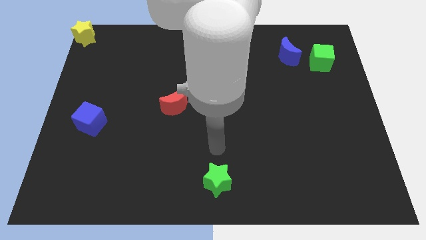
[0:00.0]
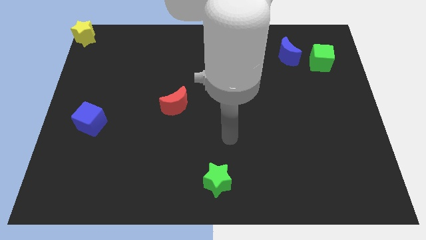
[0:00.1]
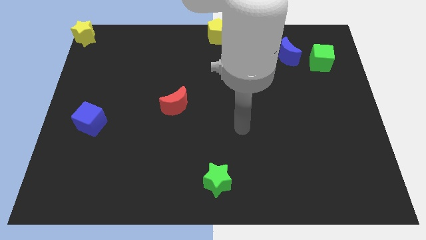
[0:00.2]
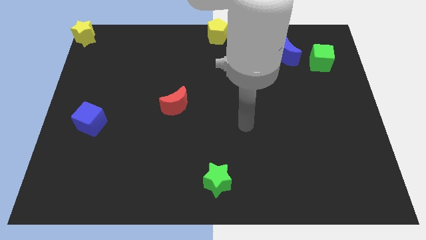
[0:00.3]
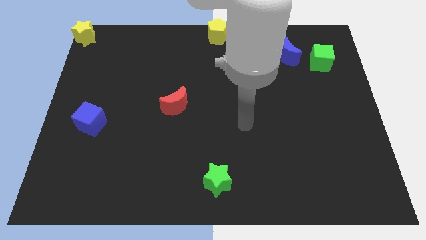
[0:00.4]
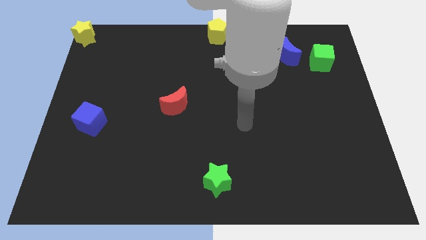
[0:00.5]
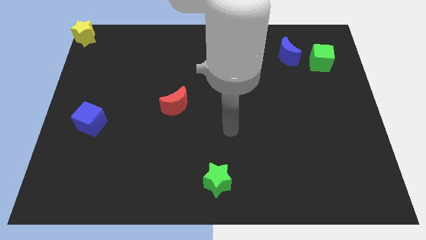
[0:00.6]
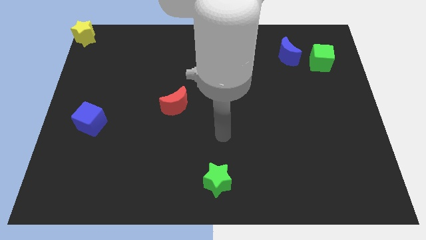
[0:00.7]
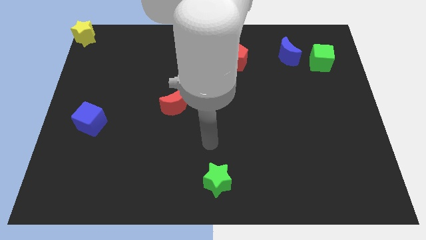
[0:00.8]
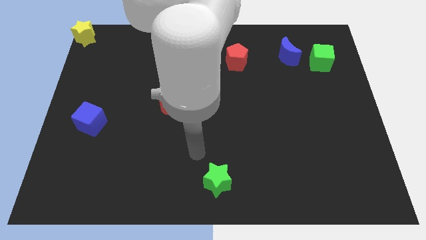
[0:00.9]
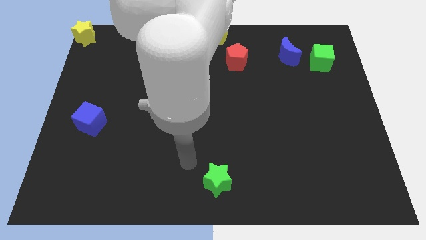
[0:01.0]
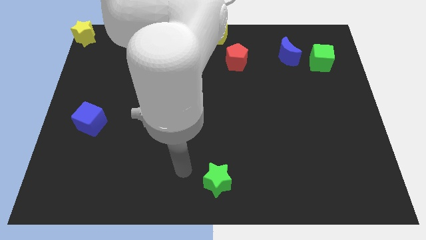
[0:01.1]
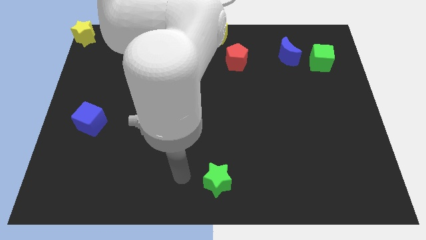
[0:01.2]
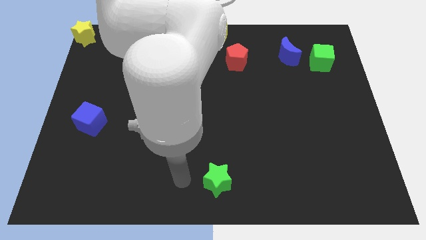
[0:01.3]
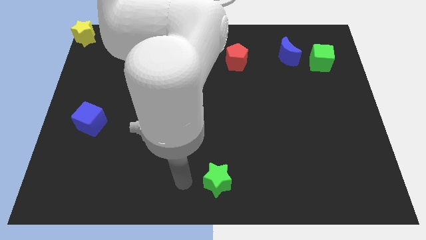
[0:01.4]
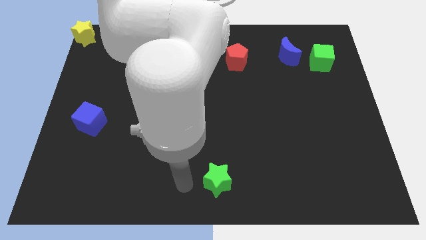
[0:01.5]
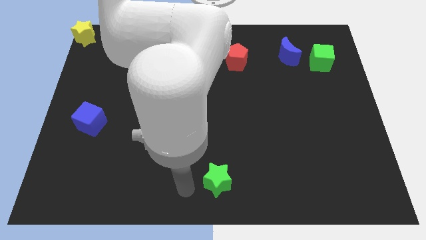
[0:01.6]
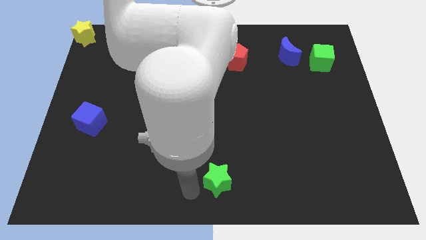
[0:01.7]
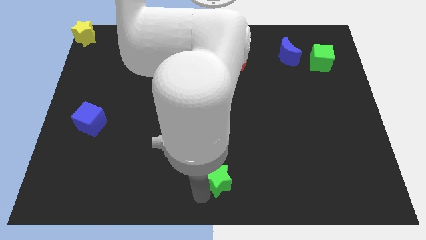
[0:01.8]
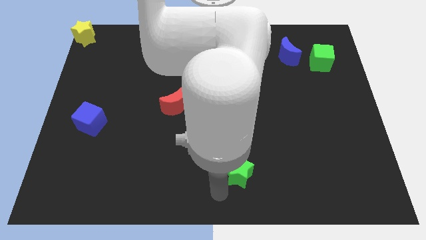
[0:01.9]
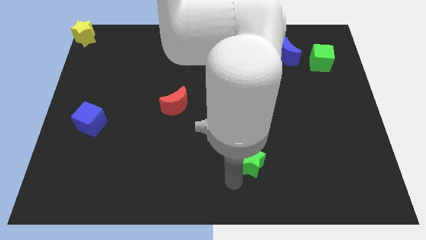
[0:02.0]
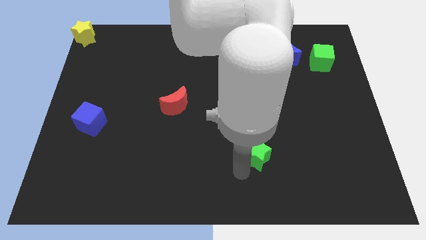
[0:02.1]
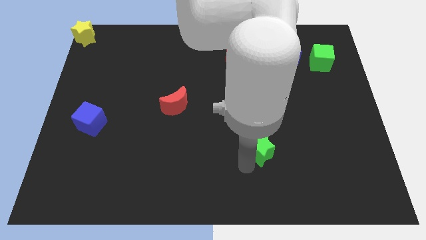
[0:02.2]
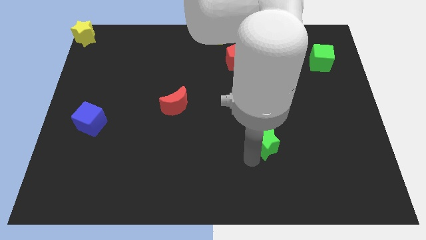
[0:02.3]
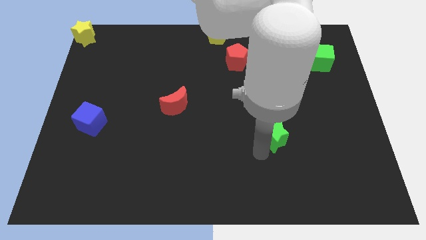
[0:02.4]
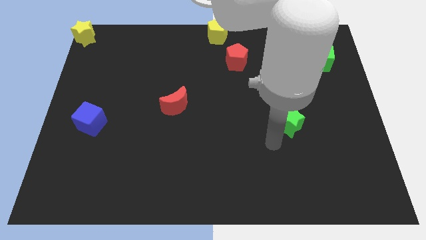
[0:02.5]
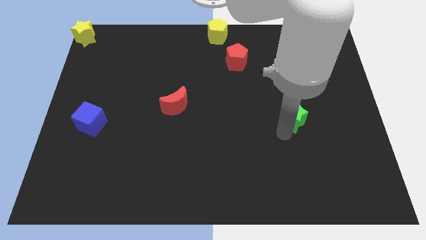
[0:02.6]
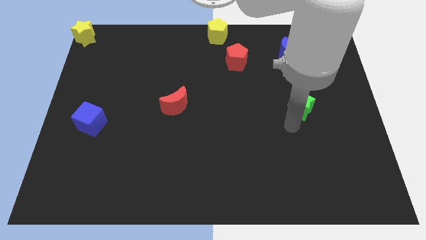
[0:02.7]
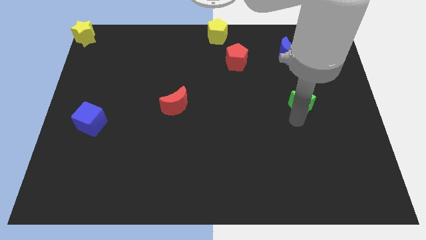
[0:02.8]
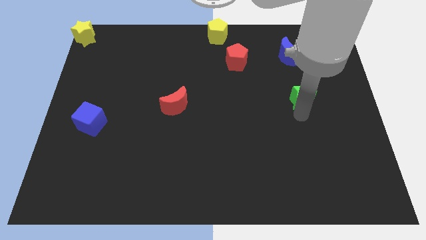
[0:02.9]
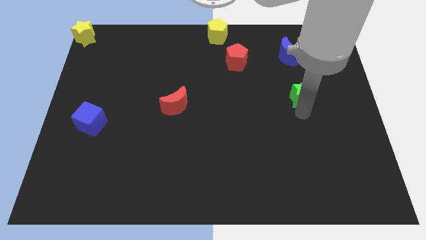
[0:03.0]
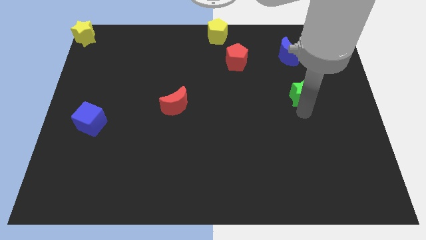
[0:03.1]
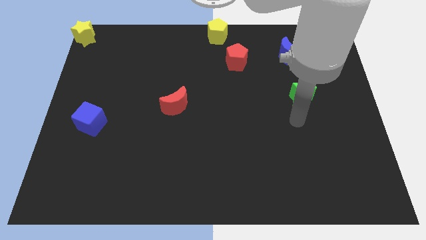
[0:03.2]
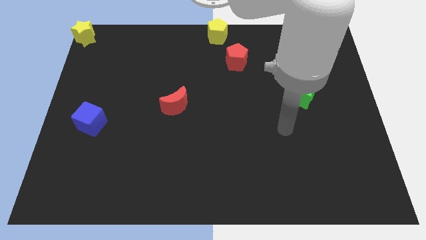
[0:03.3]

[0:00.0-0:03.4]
place the green star towards the bottom of the green cube

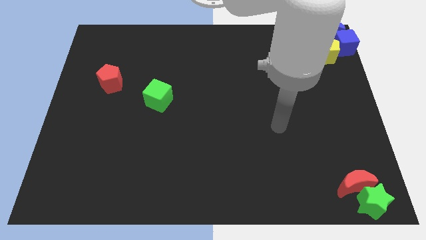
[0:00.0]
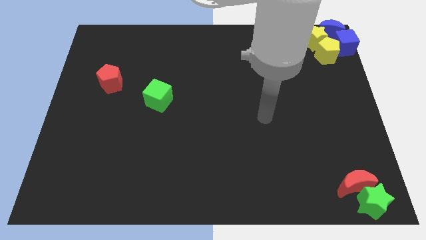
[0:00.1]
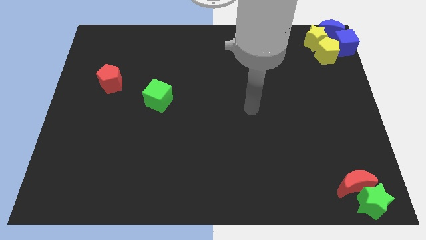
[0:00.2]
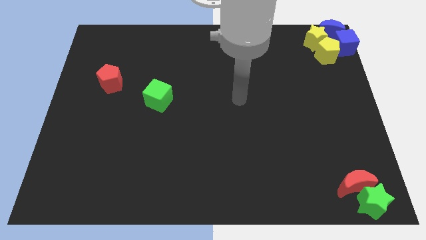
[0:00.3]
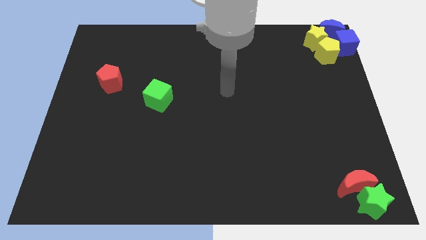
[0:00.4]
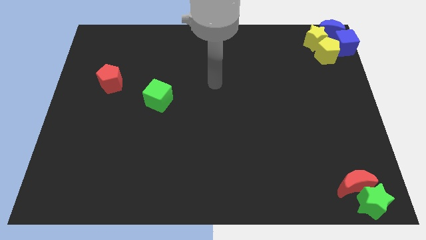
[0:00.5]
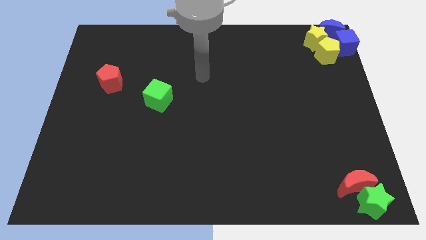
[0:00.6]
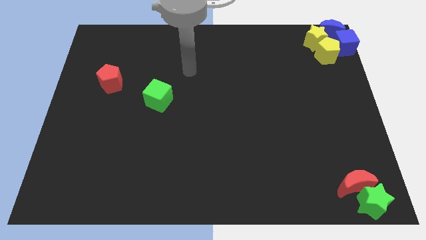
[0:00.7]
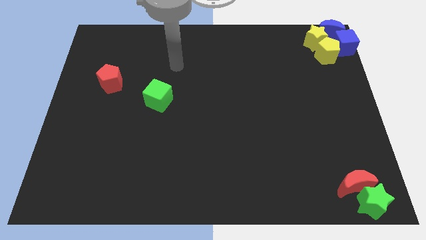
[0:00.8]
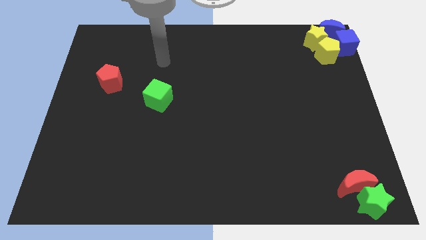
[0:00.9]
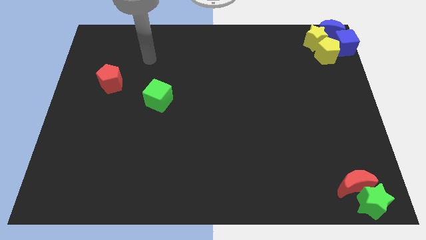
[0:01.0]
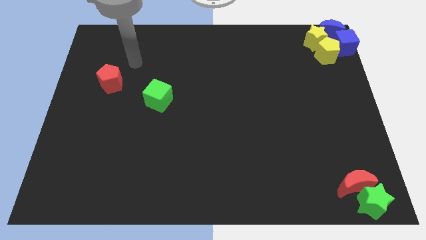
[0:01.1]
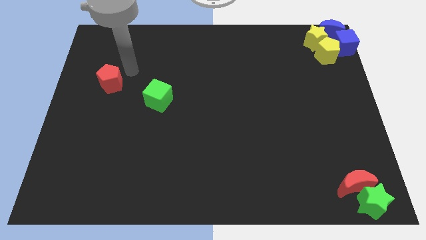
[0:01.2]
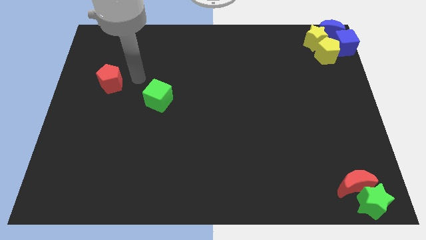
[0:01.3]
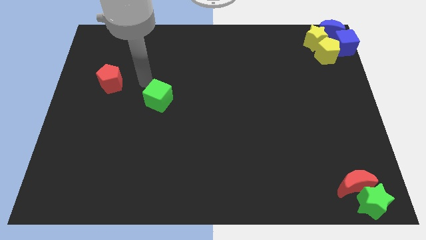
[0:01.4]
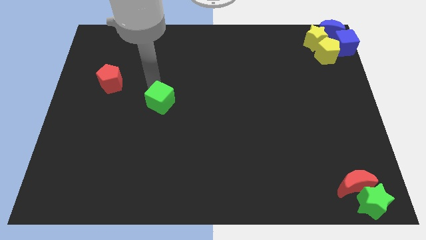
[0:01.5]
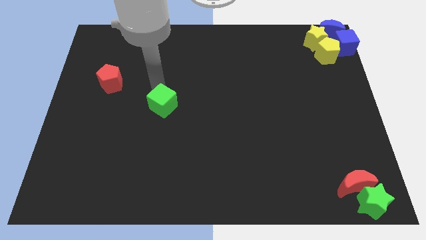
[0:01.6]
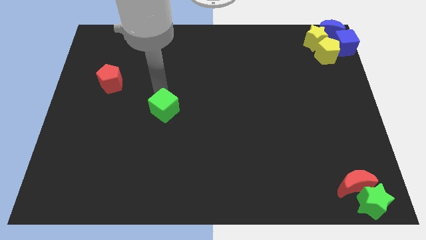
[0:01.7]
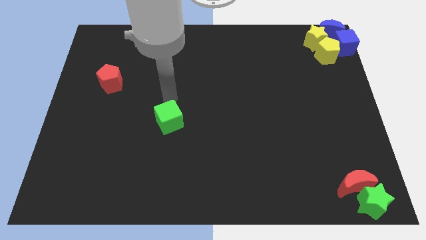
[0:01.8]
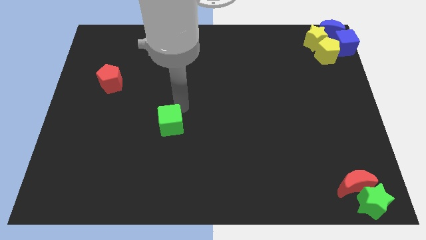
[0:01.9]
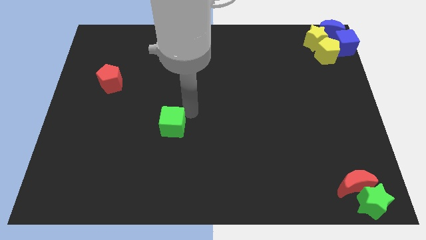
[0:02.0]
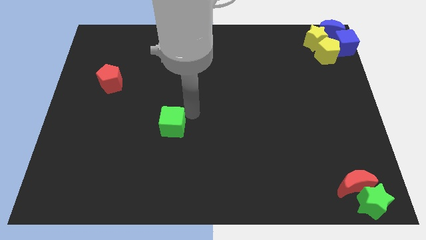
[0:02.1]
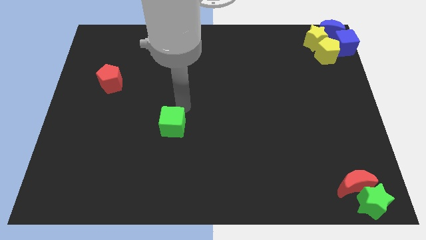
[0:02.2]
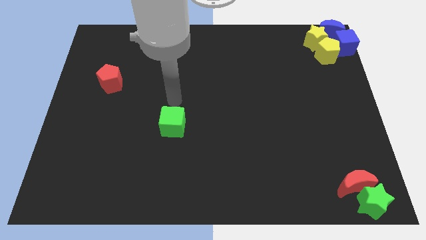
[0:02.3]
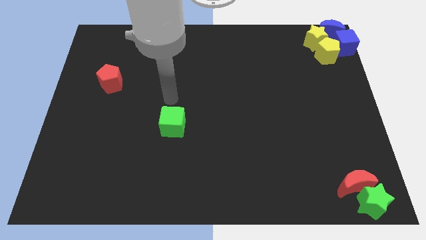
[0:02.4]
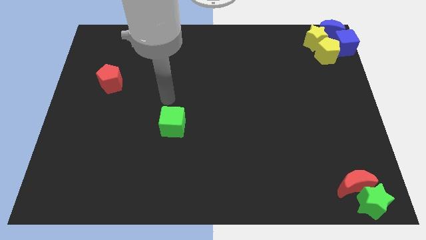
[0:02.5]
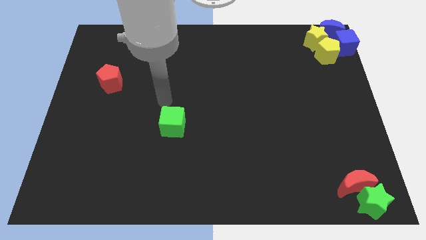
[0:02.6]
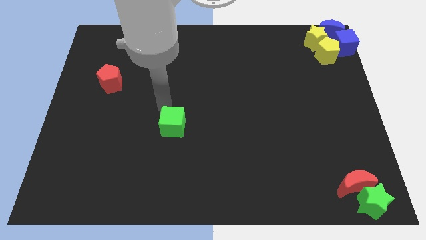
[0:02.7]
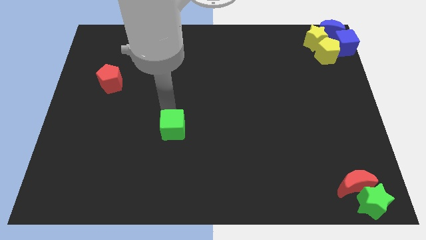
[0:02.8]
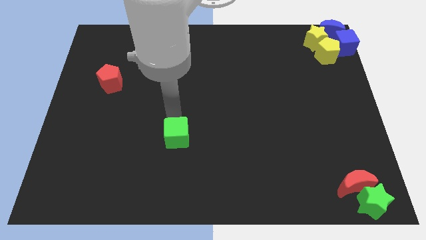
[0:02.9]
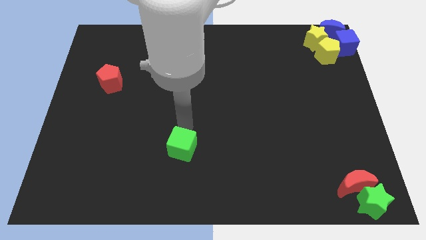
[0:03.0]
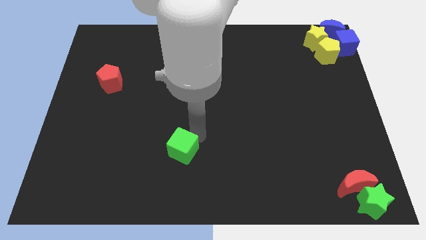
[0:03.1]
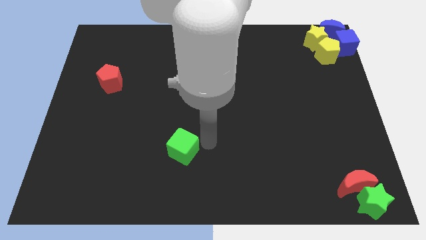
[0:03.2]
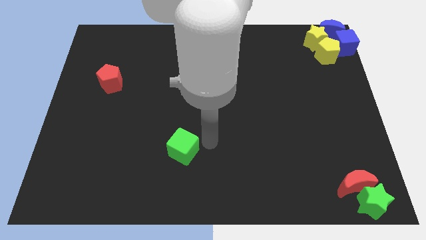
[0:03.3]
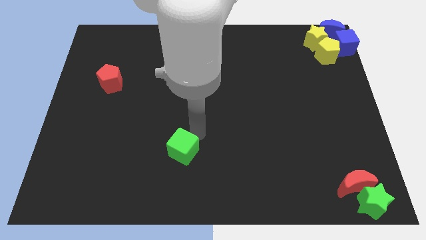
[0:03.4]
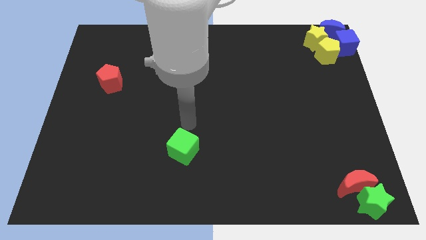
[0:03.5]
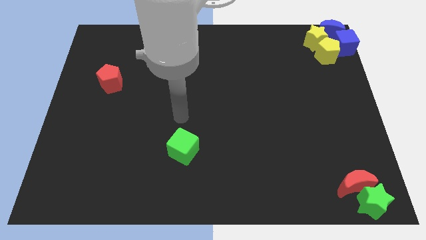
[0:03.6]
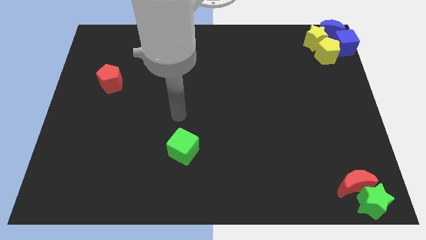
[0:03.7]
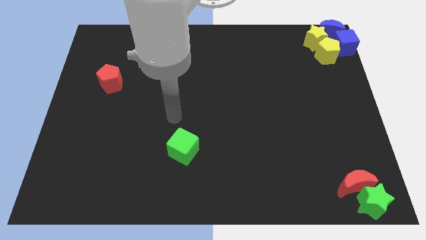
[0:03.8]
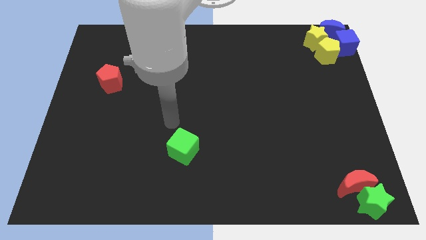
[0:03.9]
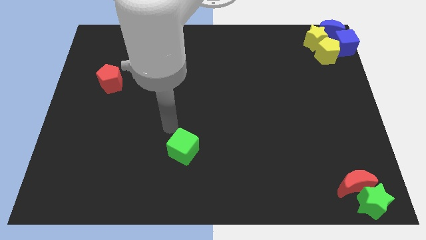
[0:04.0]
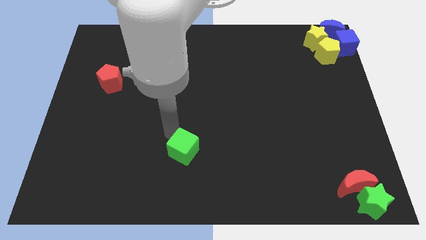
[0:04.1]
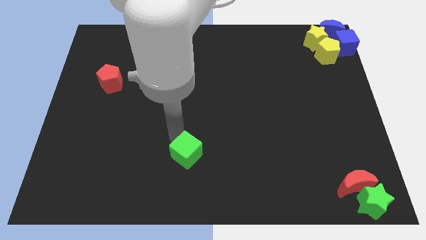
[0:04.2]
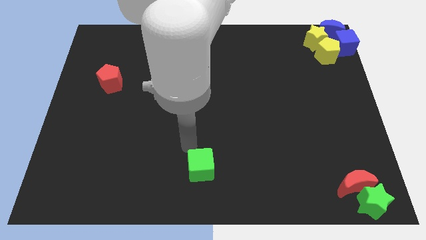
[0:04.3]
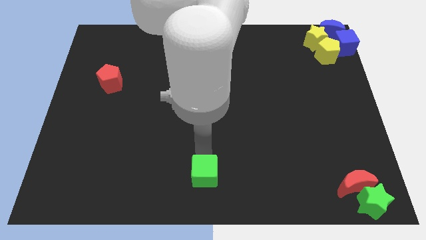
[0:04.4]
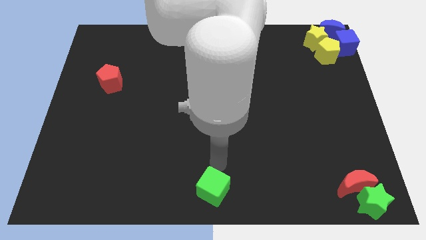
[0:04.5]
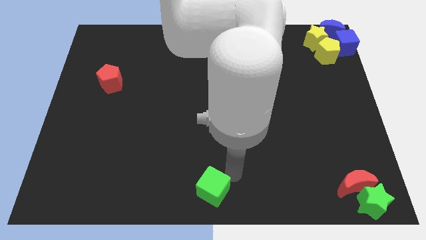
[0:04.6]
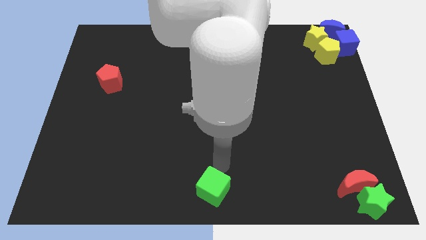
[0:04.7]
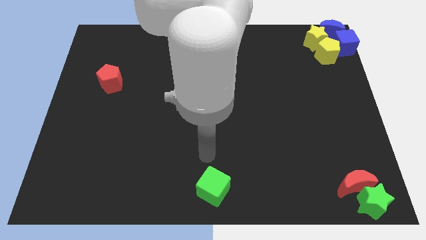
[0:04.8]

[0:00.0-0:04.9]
place the green cube at the bottom center

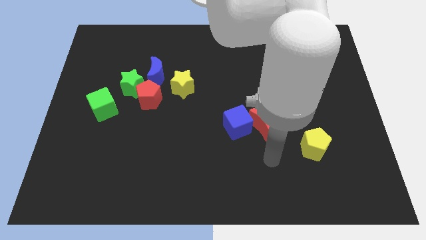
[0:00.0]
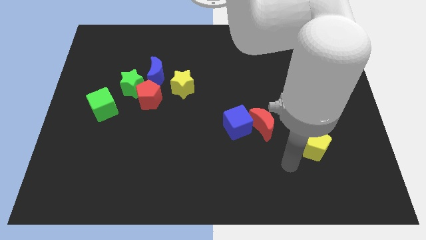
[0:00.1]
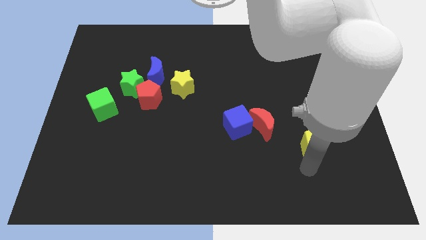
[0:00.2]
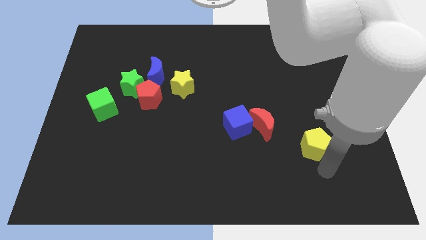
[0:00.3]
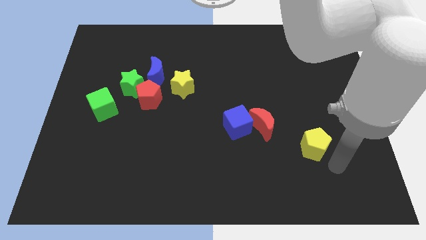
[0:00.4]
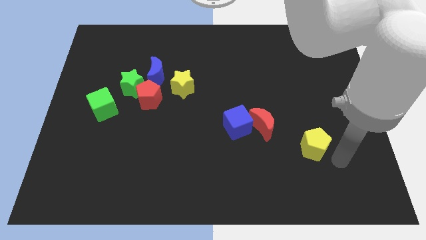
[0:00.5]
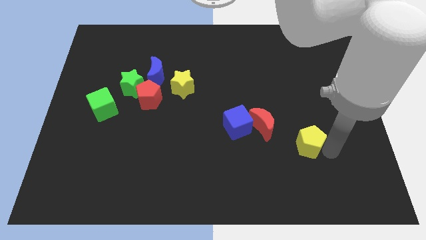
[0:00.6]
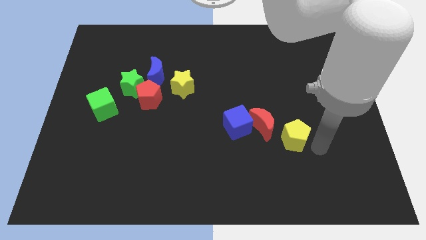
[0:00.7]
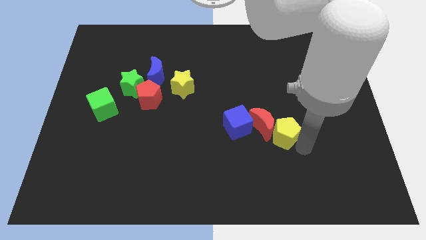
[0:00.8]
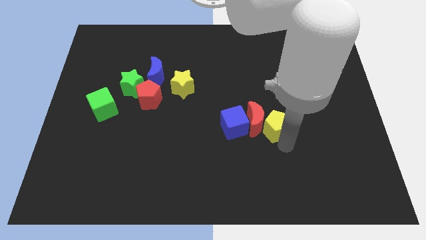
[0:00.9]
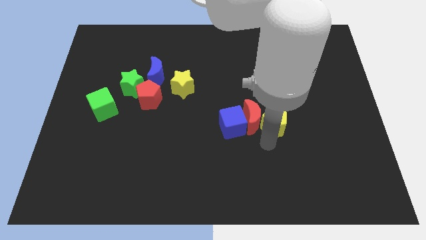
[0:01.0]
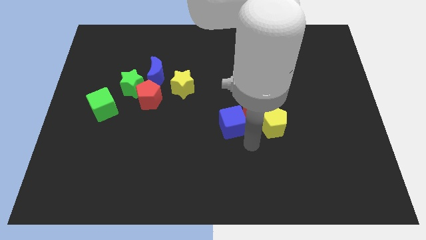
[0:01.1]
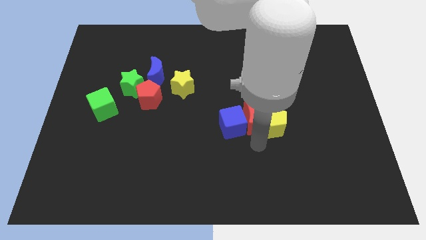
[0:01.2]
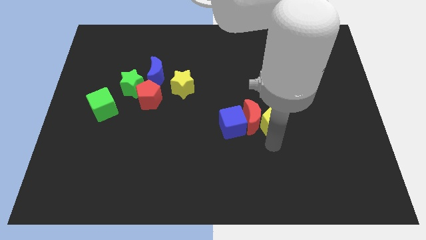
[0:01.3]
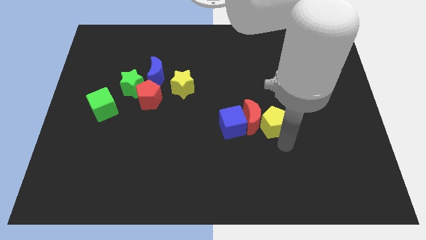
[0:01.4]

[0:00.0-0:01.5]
move the yellow pentagon into red moon
